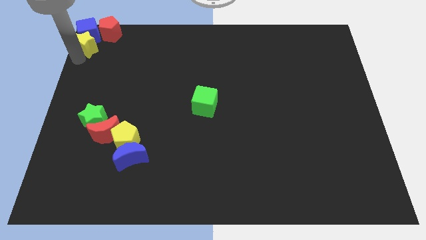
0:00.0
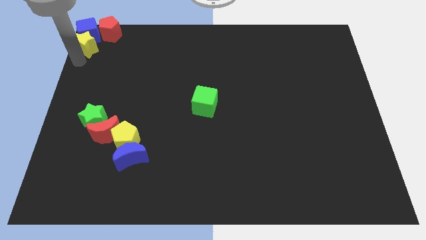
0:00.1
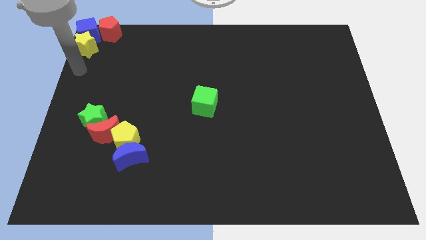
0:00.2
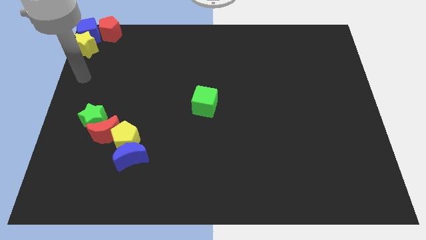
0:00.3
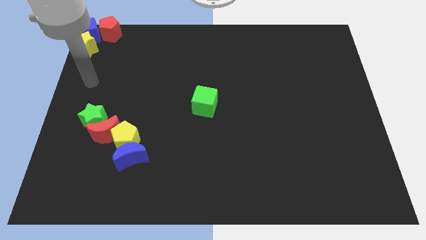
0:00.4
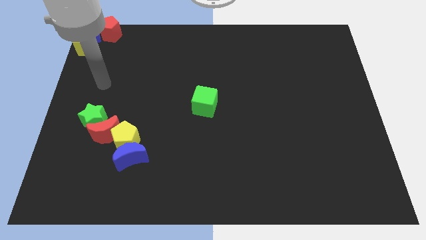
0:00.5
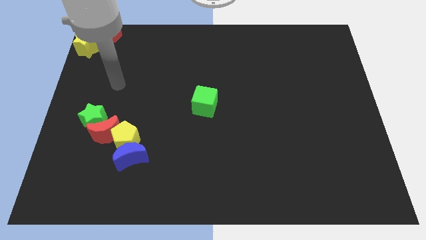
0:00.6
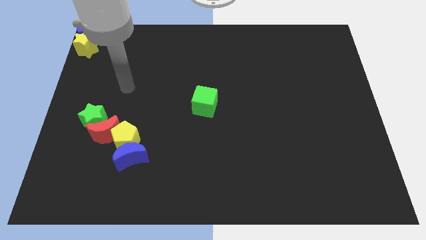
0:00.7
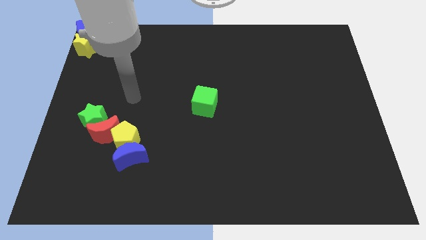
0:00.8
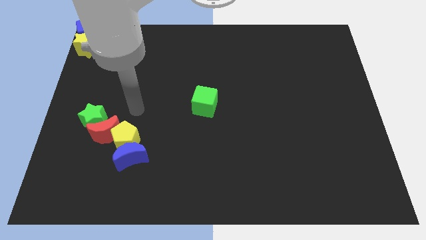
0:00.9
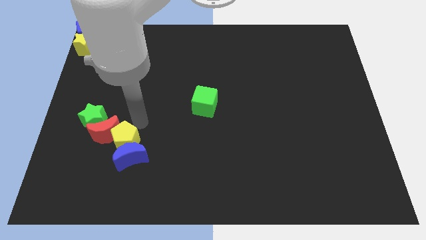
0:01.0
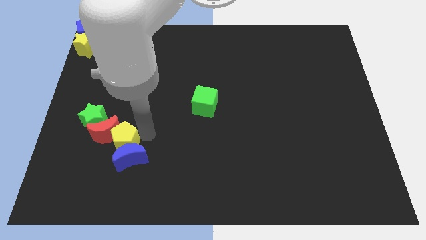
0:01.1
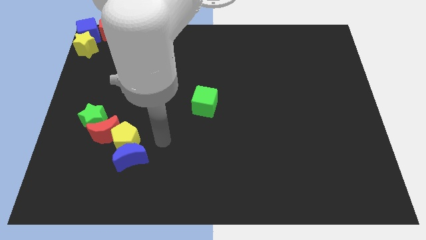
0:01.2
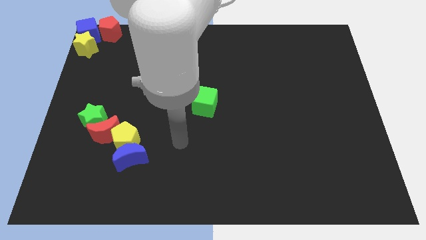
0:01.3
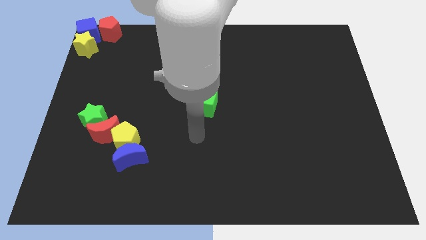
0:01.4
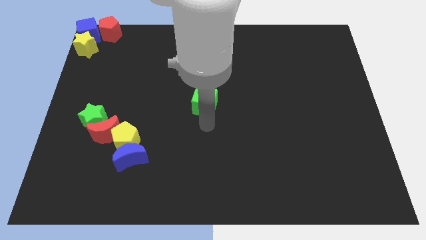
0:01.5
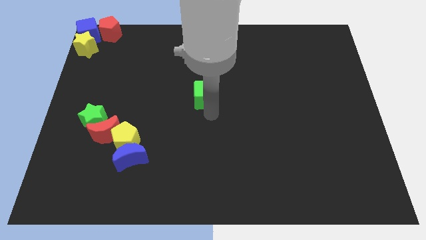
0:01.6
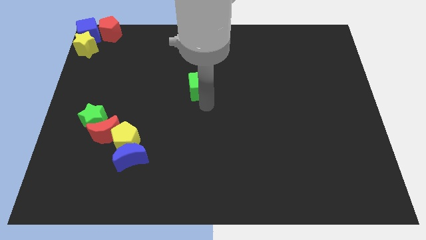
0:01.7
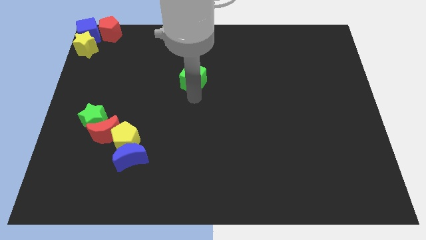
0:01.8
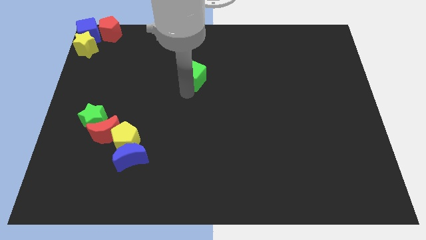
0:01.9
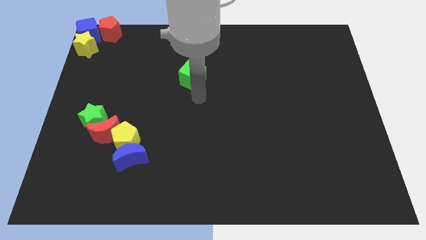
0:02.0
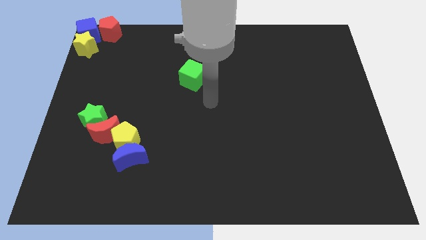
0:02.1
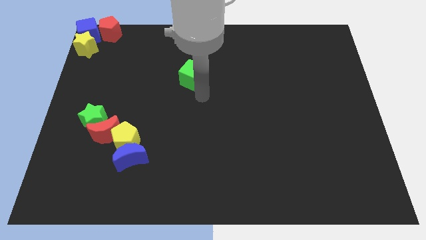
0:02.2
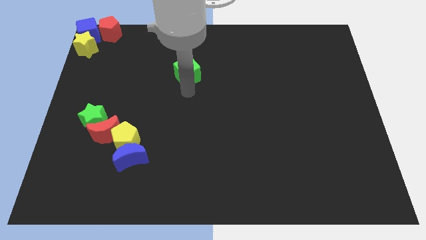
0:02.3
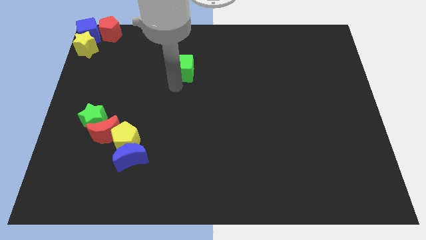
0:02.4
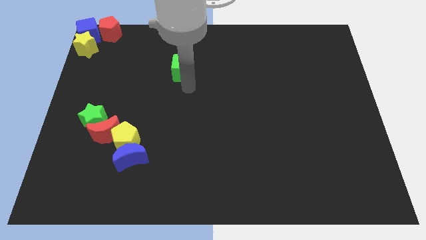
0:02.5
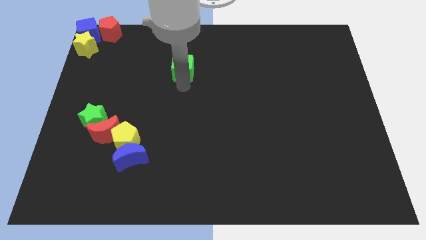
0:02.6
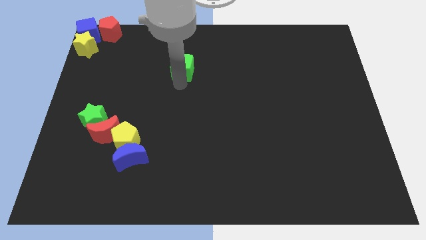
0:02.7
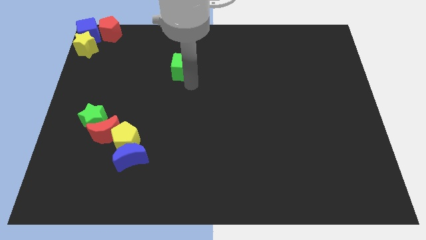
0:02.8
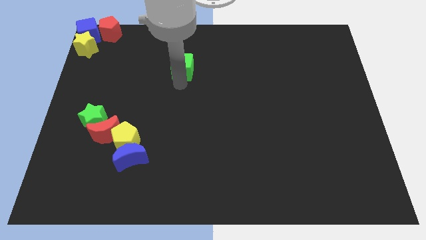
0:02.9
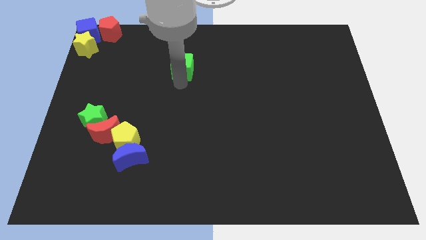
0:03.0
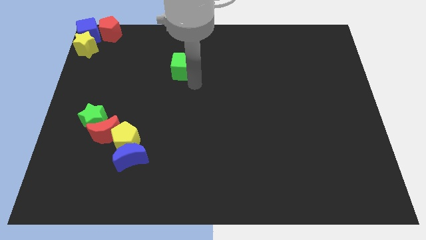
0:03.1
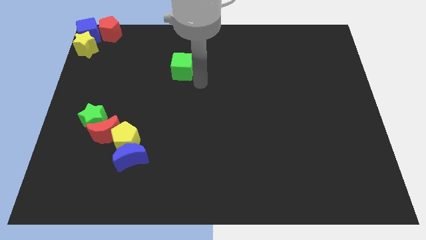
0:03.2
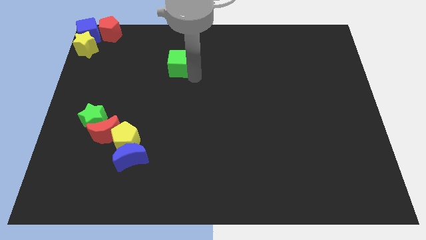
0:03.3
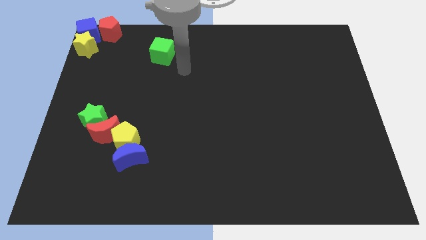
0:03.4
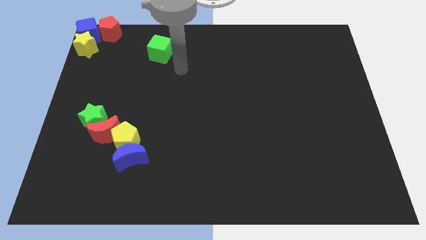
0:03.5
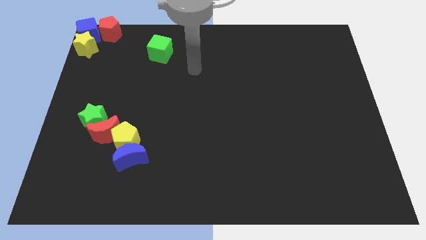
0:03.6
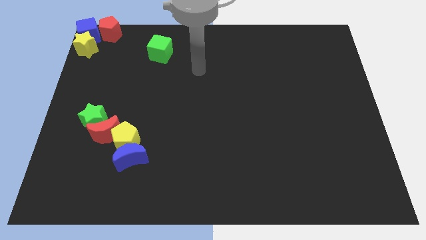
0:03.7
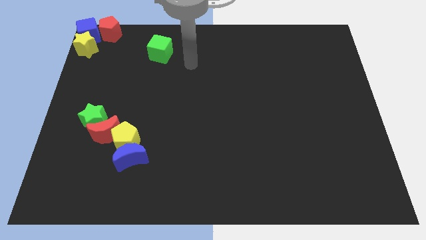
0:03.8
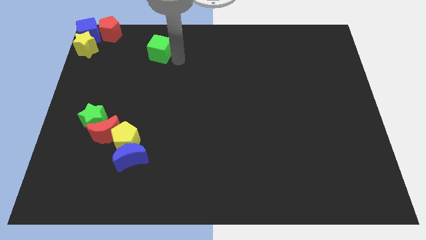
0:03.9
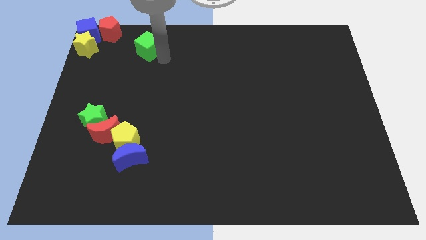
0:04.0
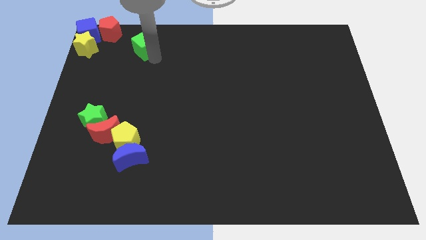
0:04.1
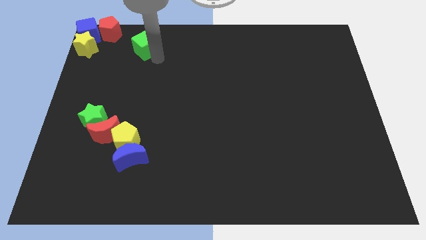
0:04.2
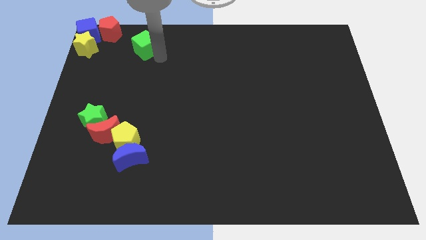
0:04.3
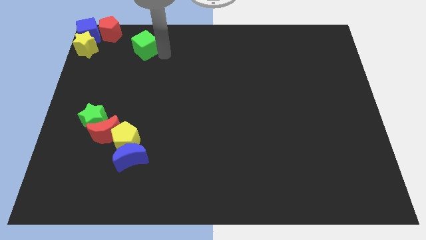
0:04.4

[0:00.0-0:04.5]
move the green block to the right side of the group of blocks

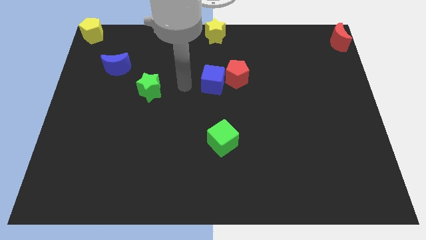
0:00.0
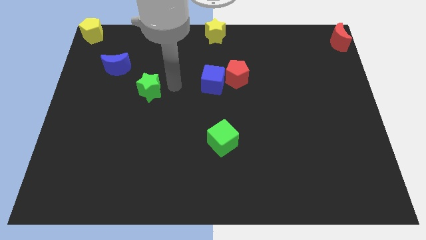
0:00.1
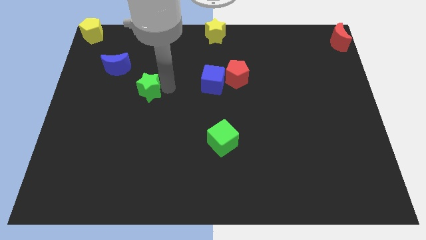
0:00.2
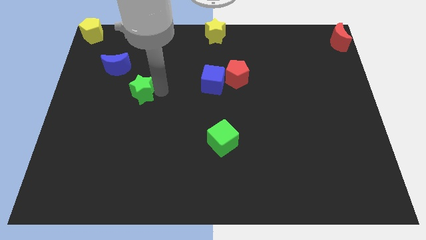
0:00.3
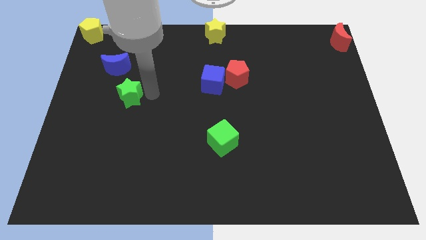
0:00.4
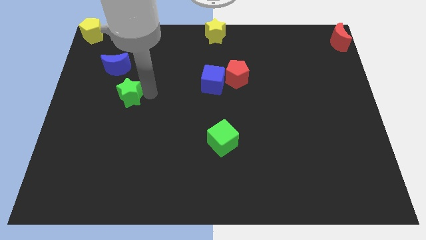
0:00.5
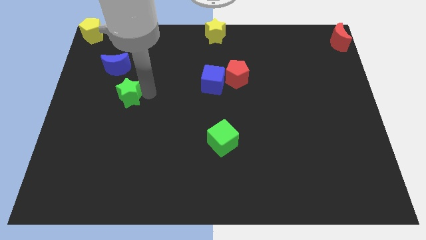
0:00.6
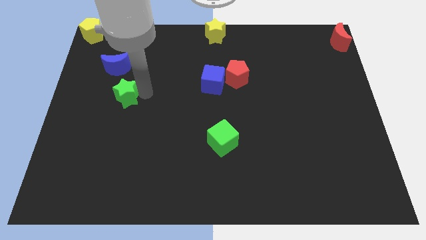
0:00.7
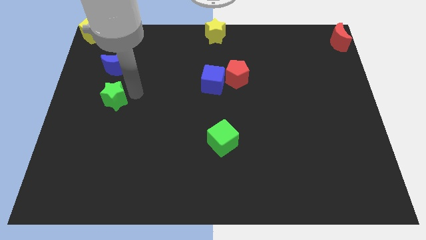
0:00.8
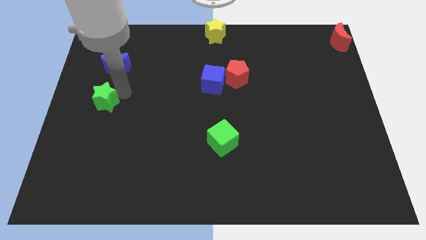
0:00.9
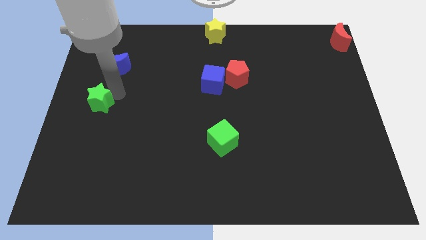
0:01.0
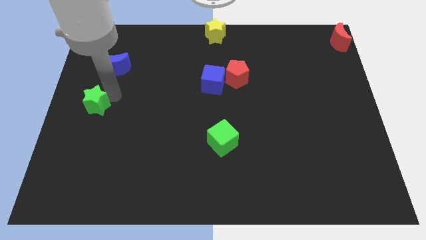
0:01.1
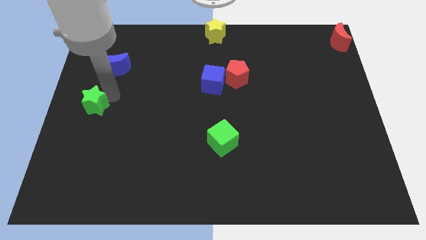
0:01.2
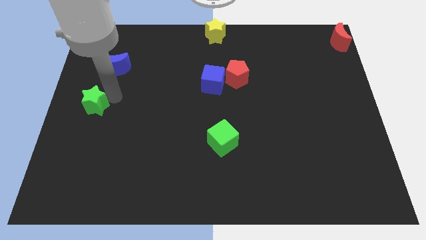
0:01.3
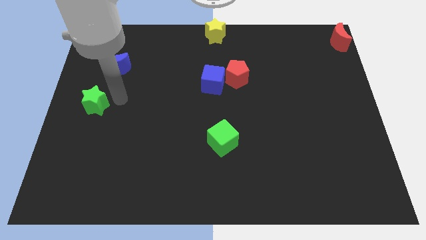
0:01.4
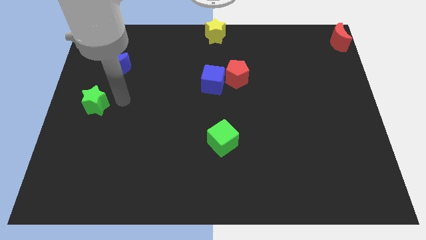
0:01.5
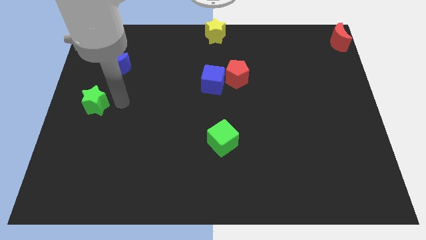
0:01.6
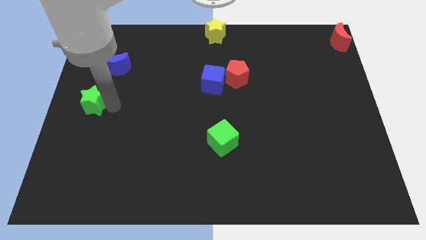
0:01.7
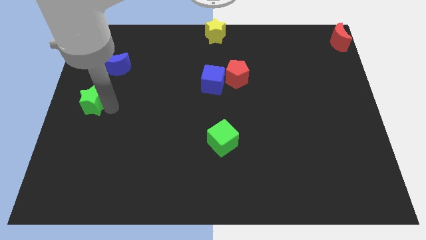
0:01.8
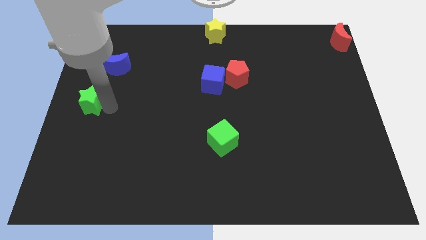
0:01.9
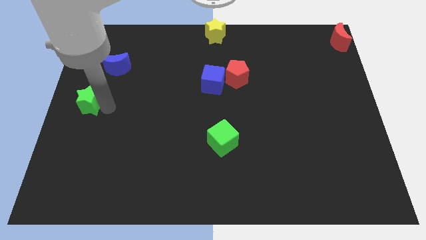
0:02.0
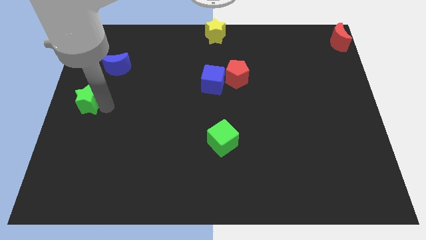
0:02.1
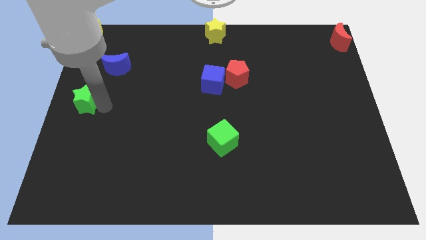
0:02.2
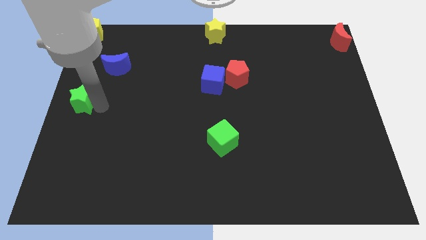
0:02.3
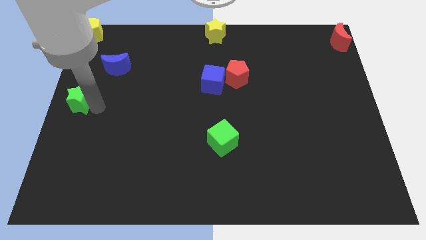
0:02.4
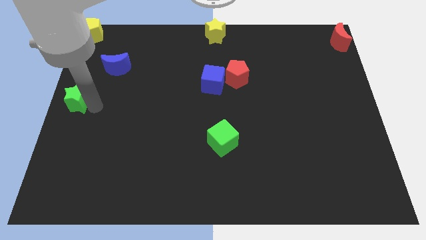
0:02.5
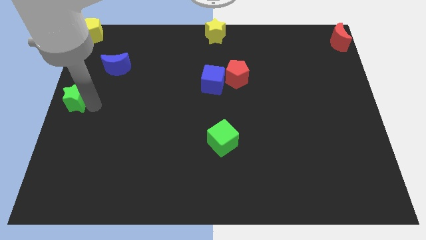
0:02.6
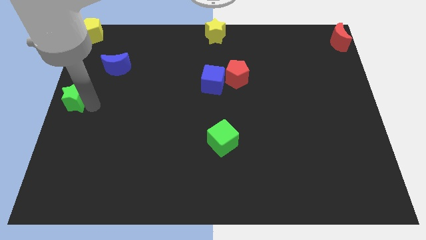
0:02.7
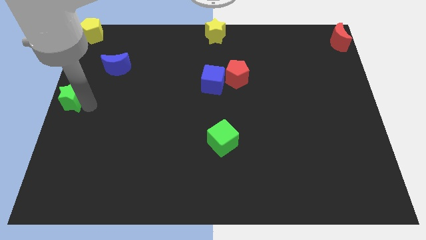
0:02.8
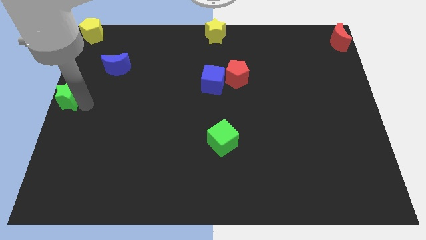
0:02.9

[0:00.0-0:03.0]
put the green star to the center left side of the board

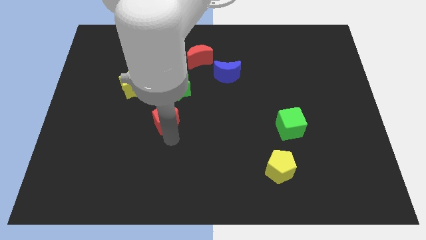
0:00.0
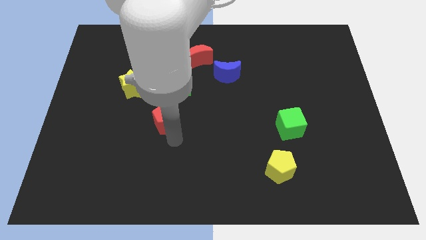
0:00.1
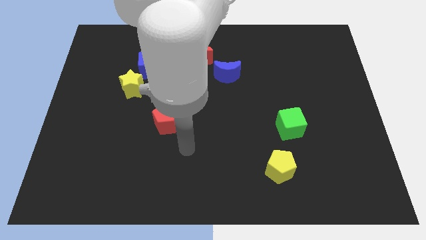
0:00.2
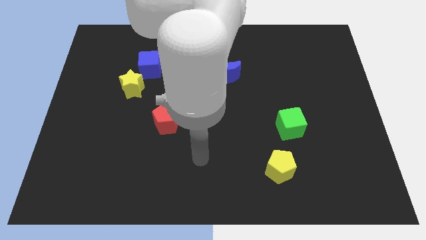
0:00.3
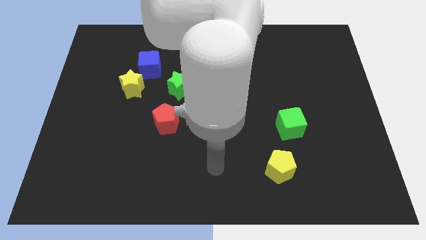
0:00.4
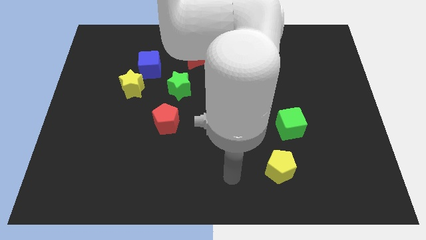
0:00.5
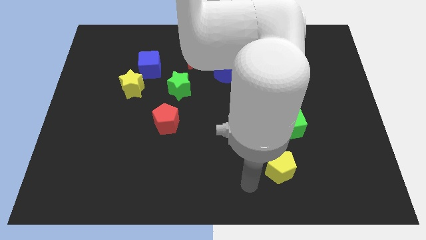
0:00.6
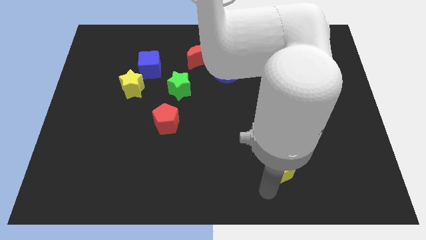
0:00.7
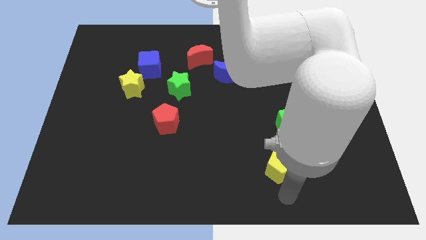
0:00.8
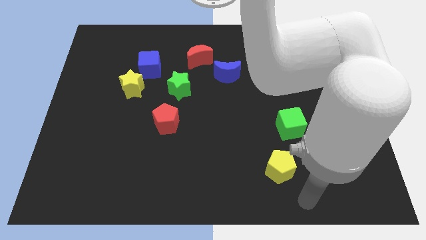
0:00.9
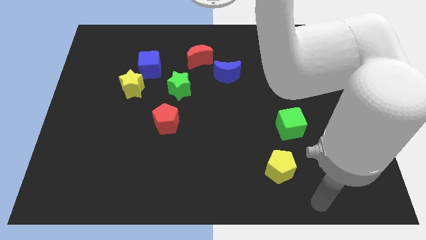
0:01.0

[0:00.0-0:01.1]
move the arm away from the red pentagon
